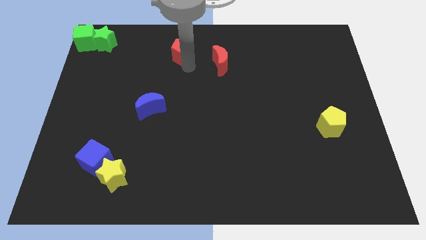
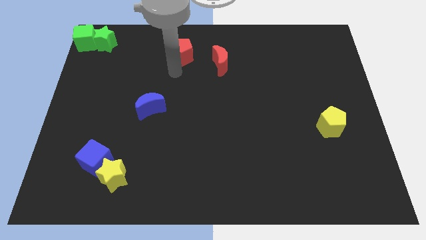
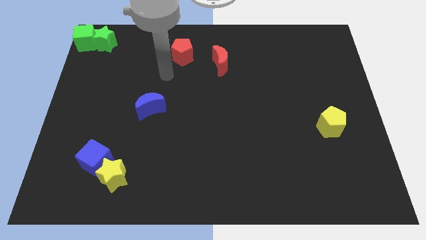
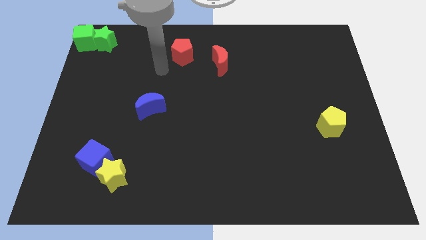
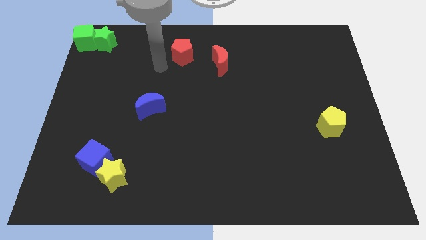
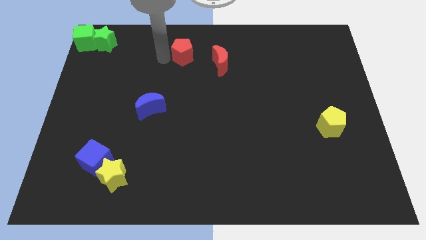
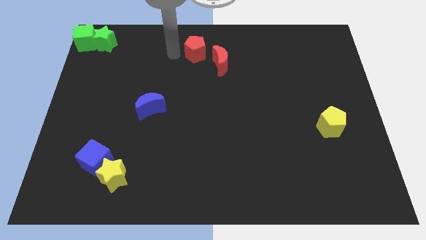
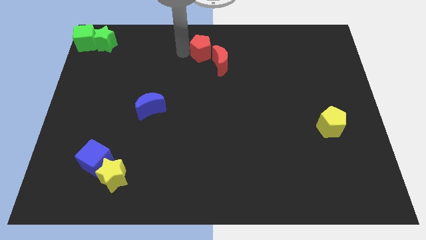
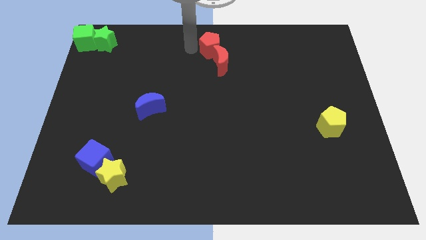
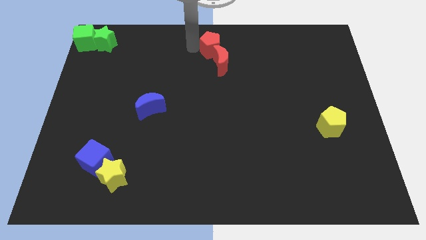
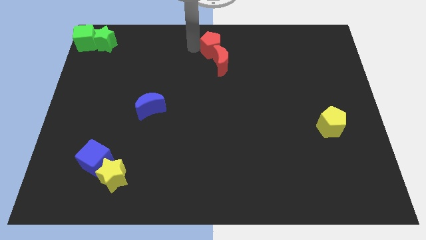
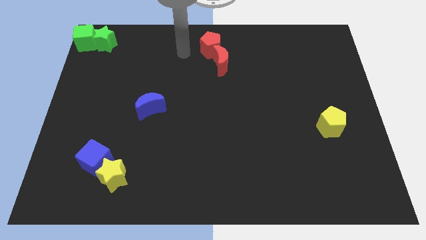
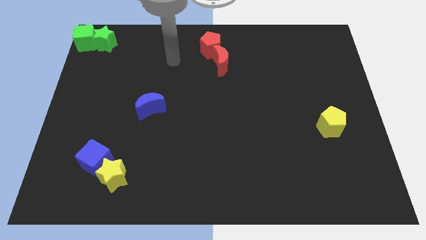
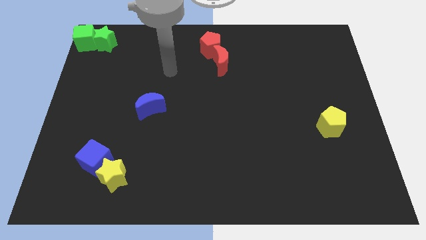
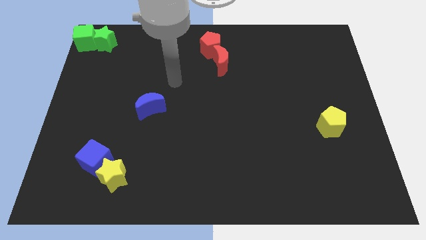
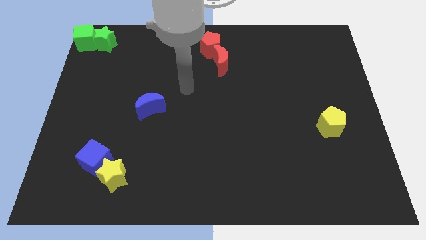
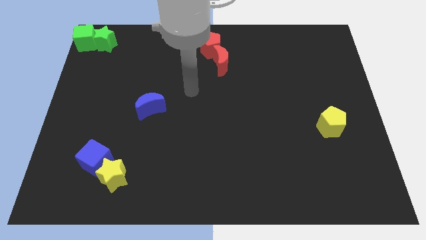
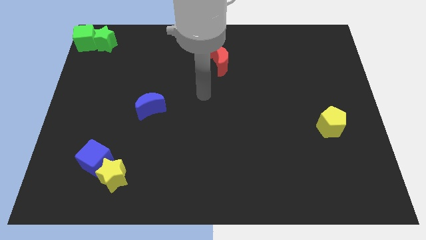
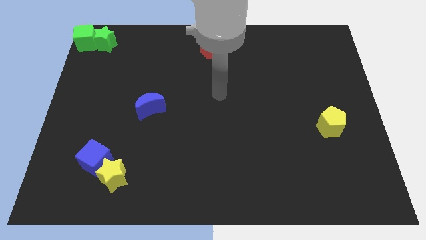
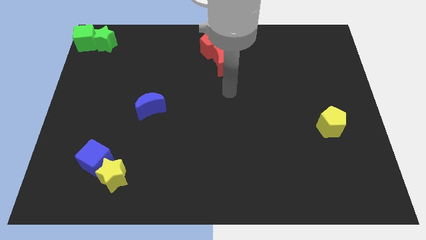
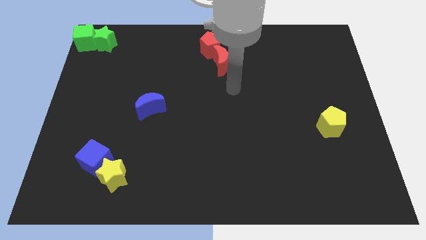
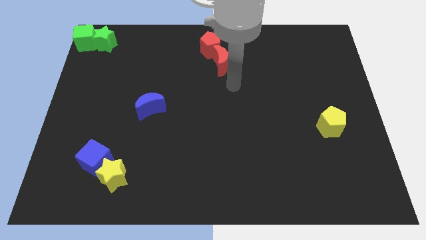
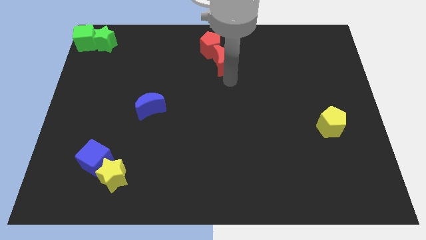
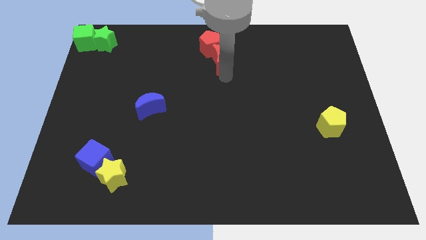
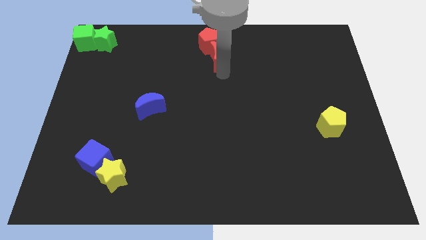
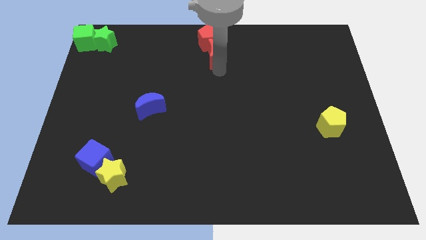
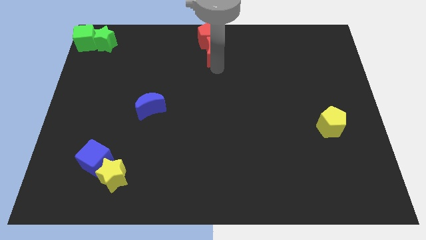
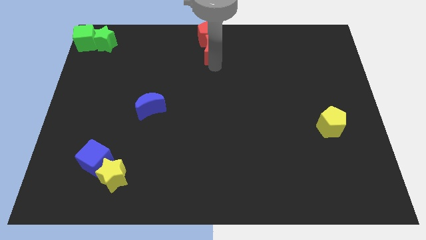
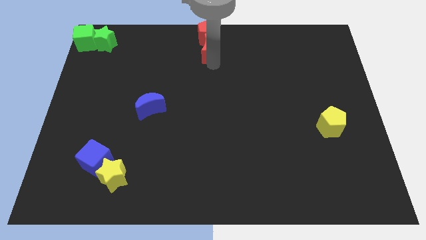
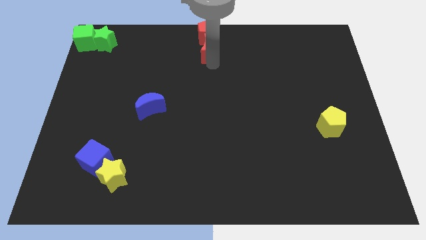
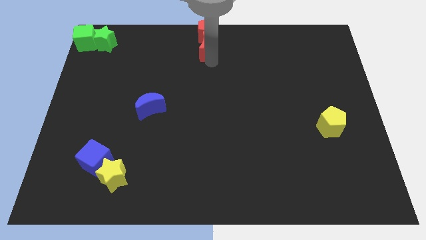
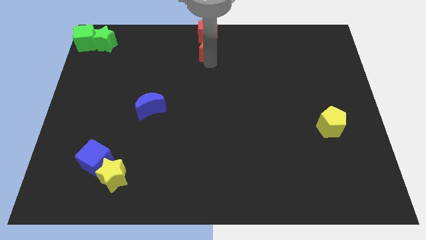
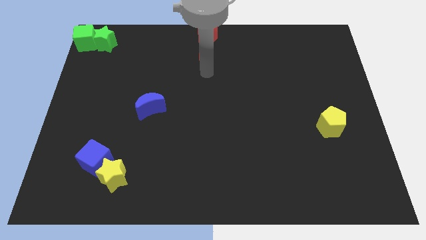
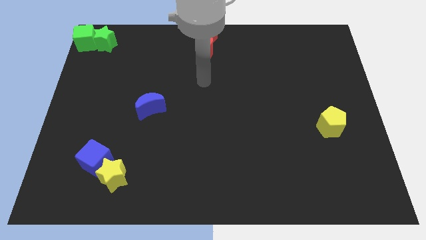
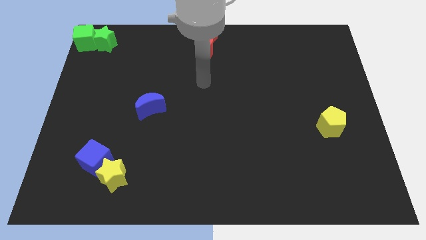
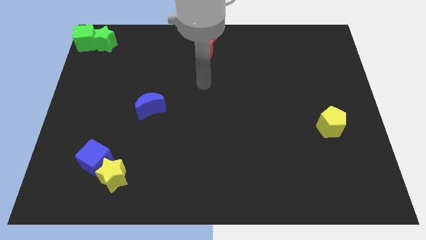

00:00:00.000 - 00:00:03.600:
push the red blocks to the top center of the board

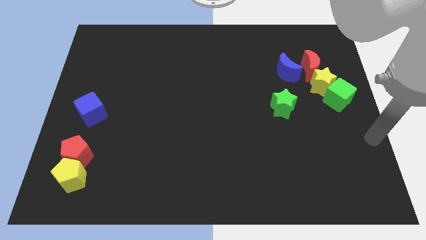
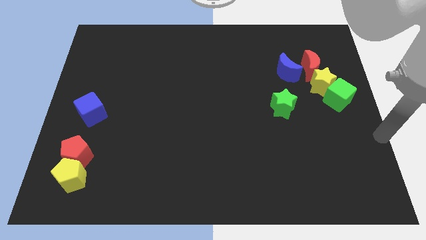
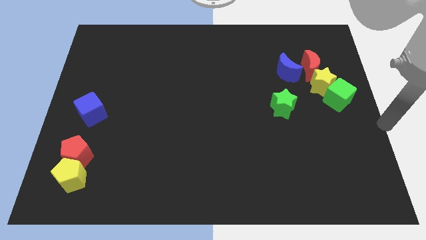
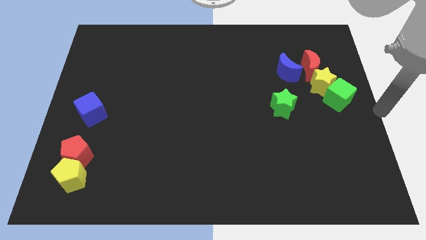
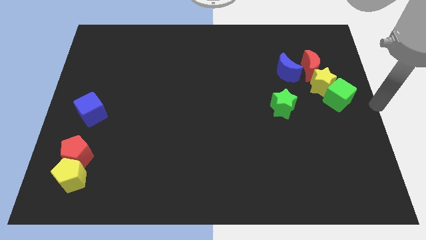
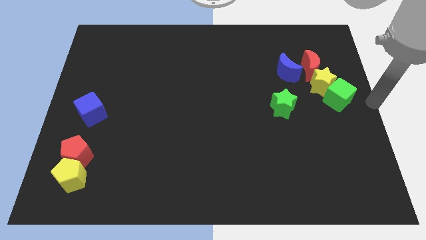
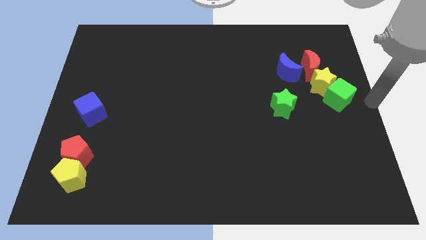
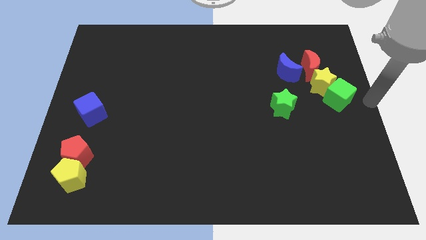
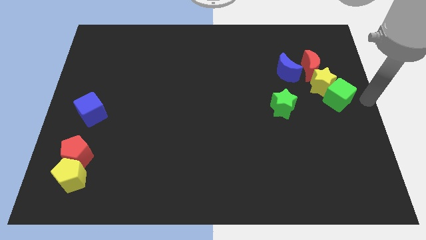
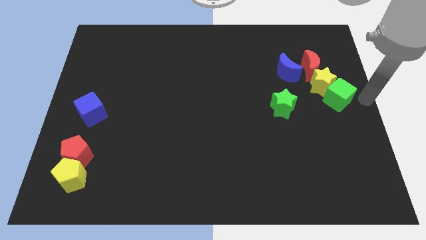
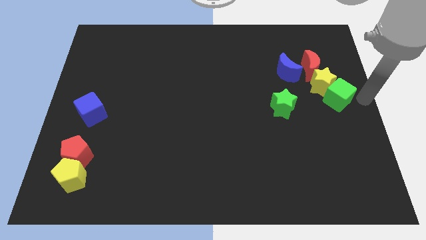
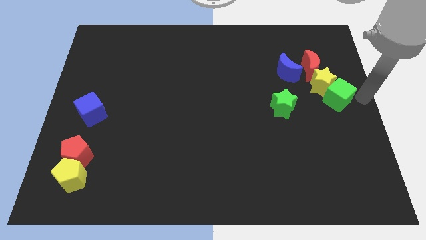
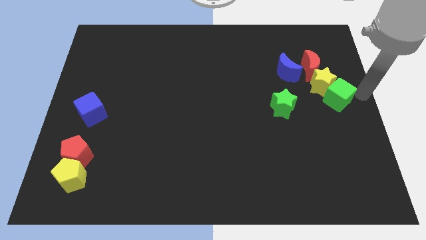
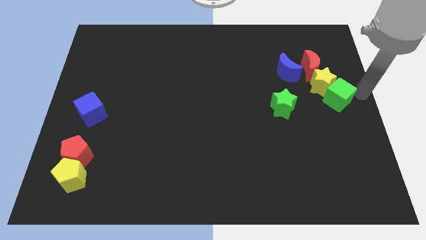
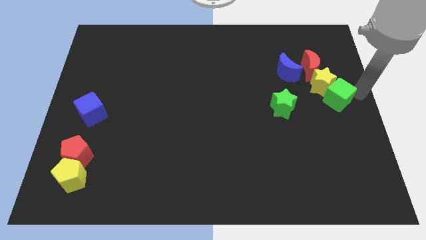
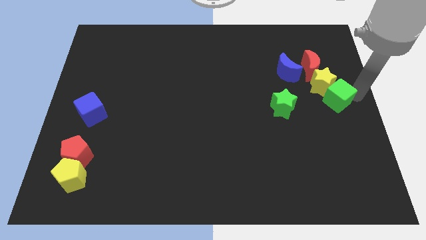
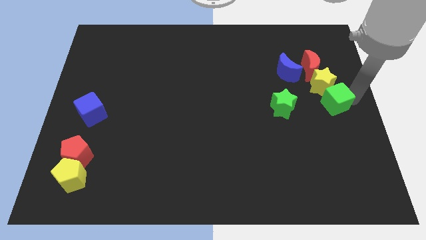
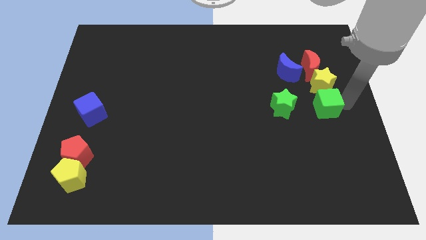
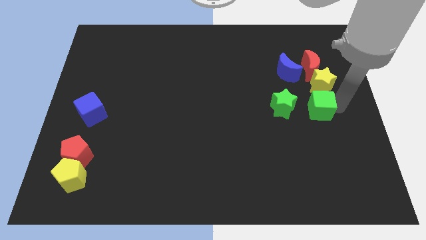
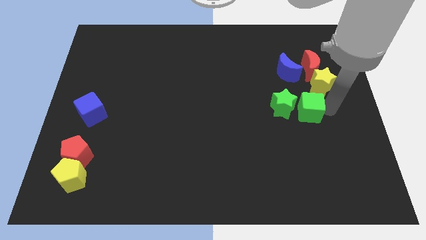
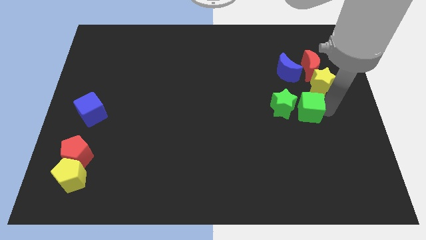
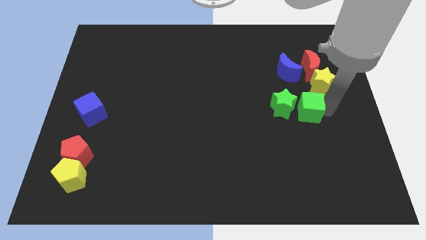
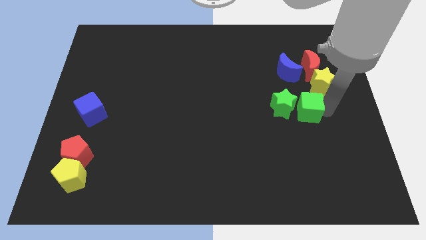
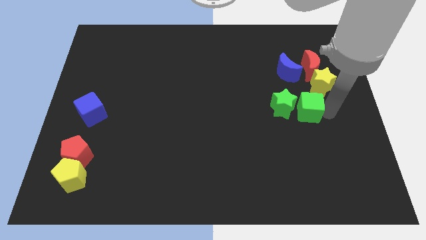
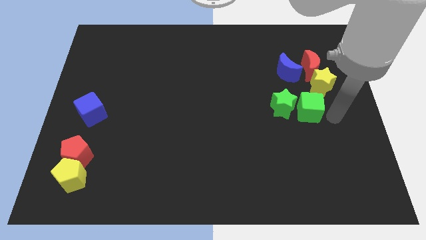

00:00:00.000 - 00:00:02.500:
separate the green cube from the yellow star

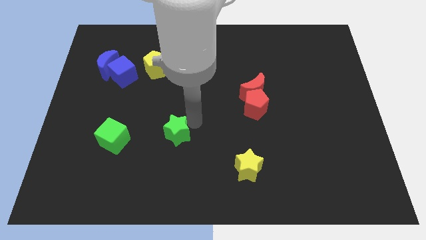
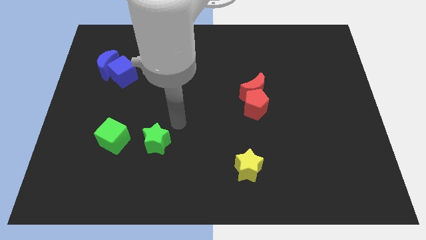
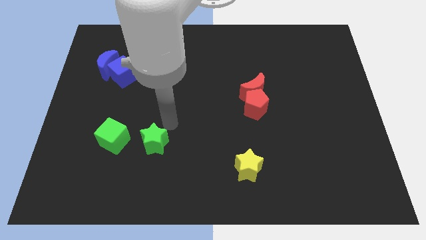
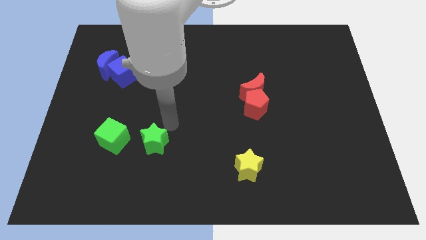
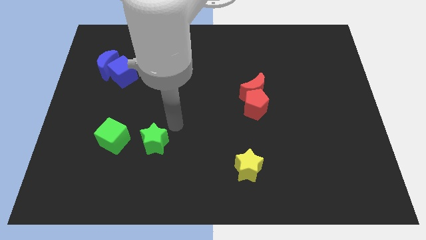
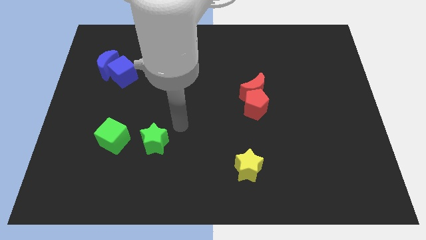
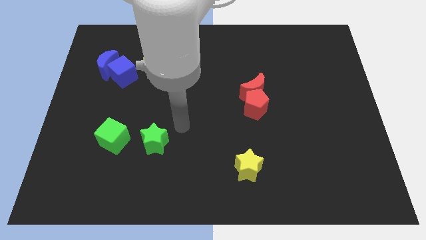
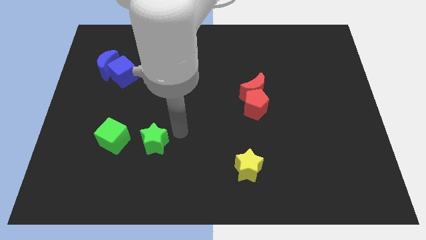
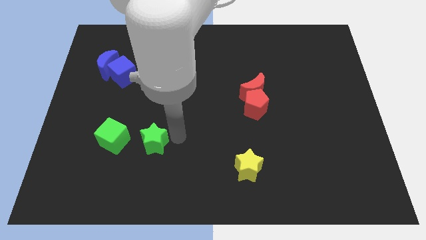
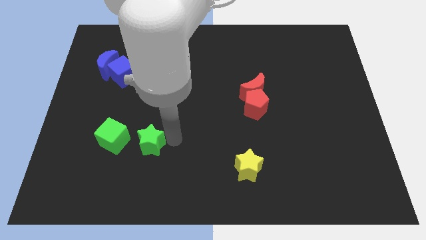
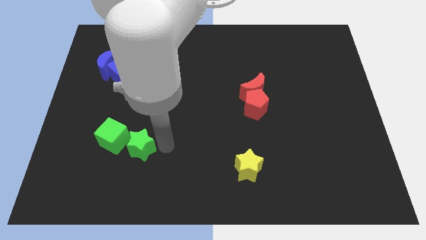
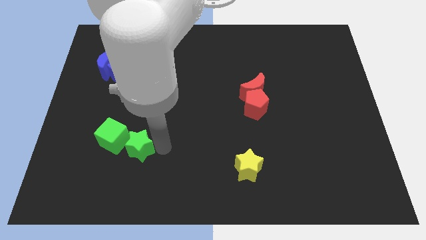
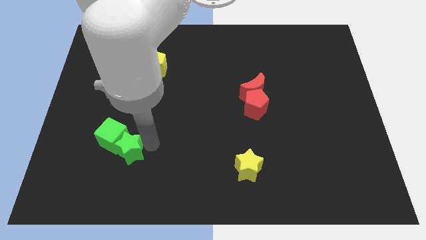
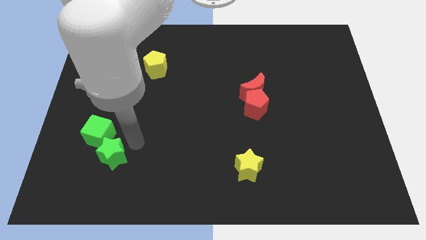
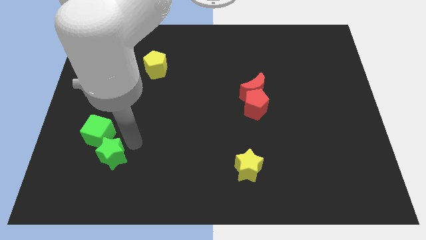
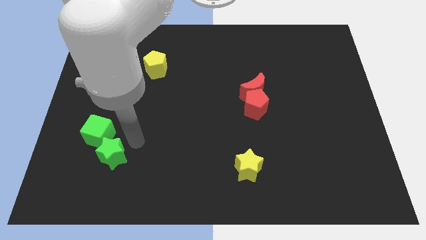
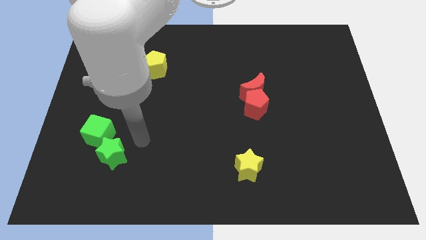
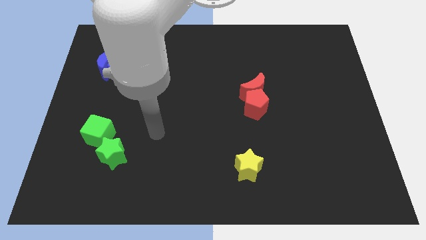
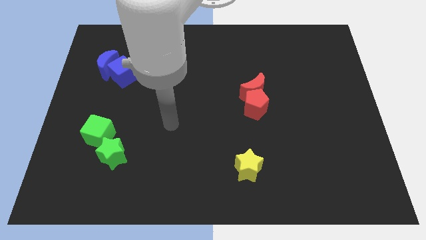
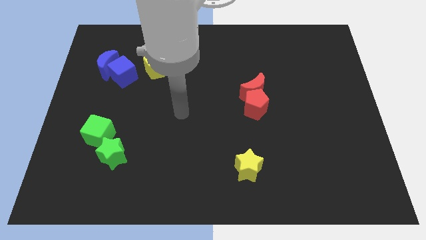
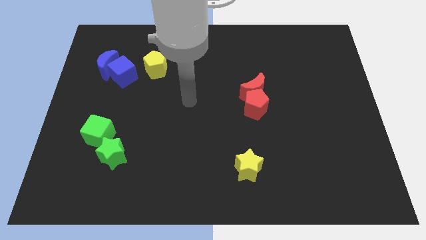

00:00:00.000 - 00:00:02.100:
move the green star close to green cube

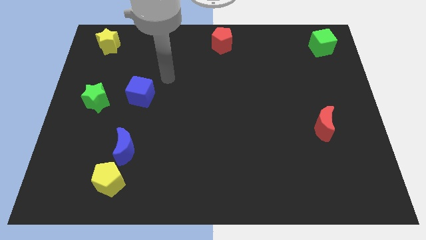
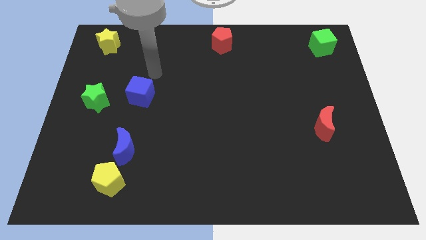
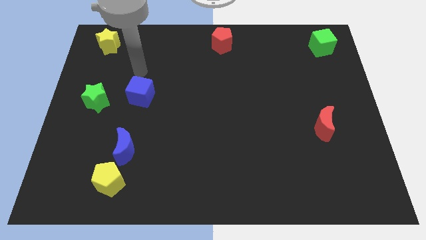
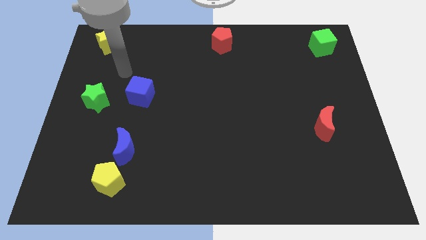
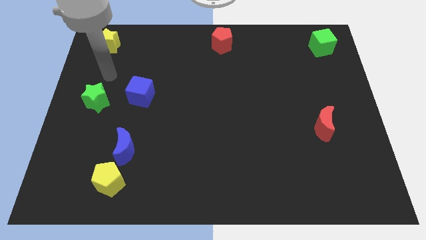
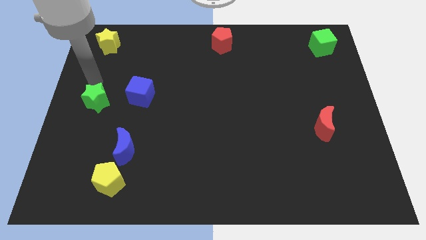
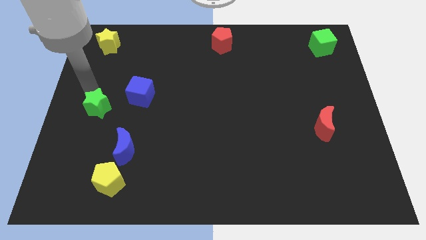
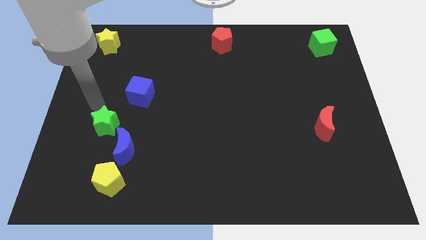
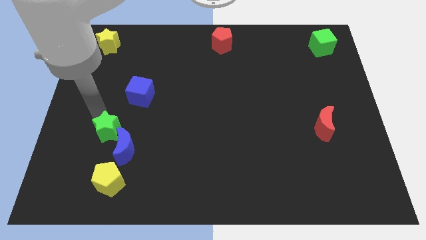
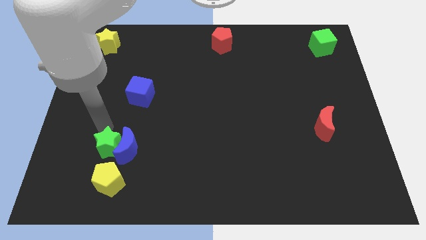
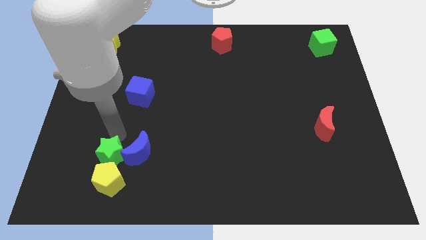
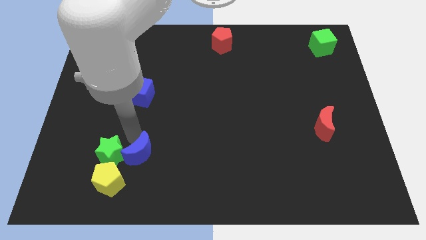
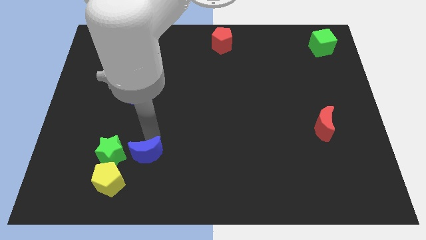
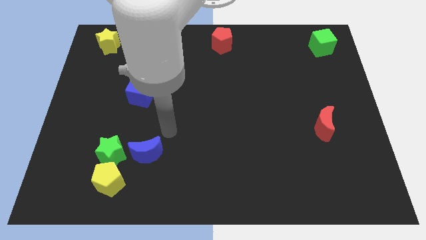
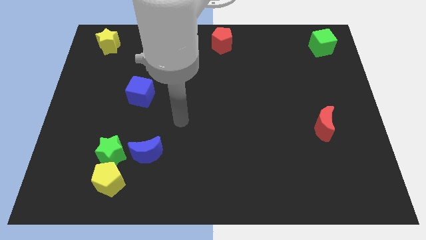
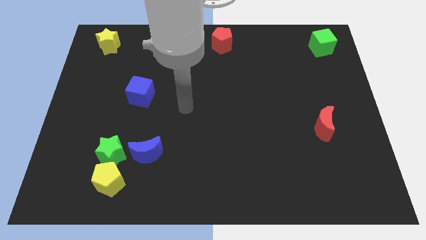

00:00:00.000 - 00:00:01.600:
push the green star into the blue moon
